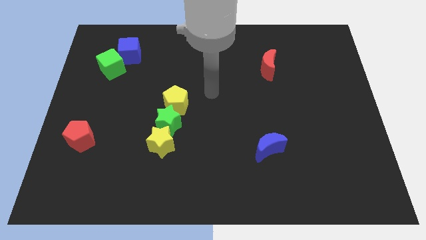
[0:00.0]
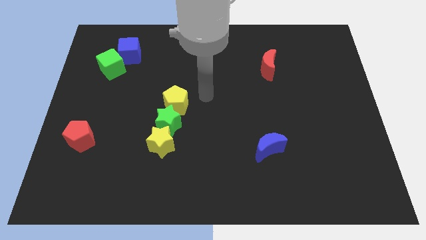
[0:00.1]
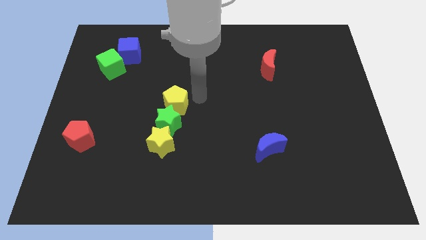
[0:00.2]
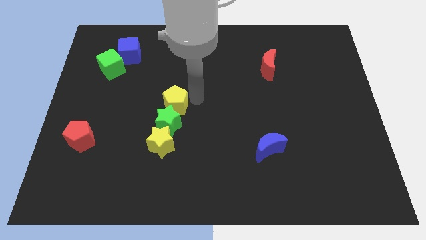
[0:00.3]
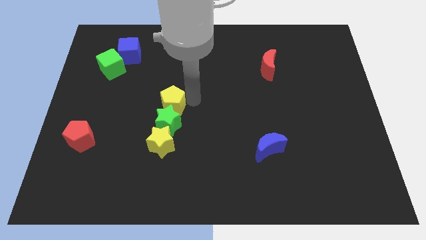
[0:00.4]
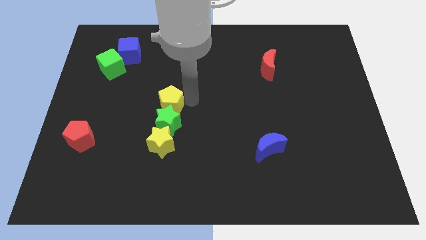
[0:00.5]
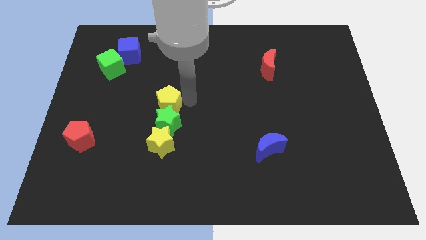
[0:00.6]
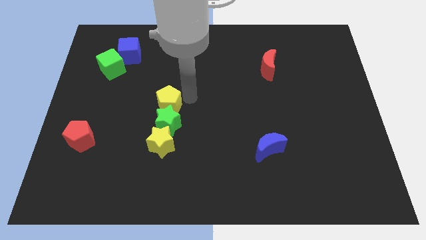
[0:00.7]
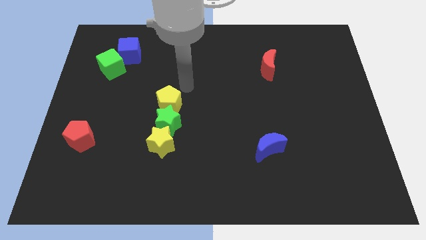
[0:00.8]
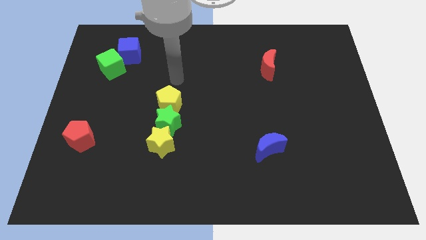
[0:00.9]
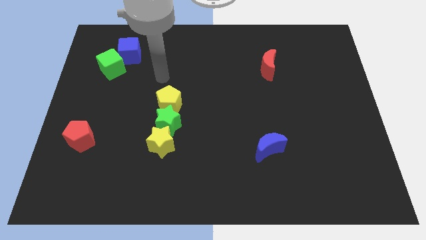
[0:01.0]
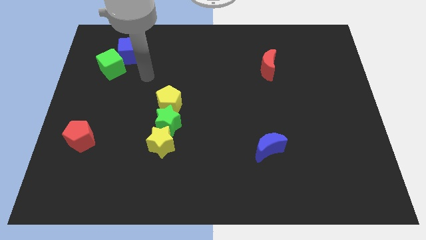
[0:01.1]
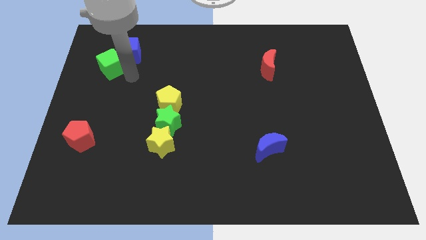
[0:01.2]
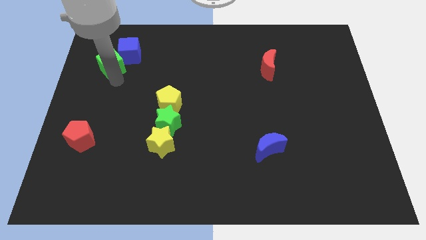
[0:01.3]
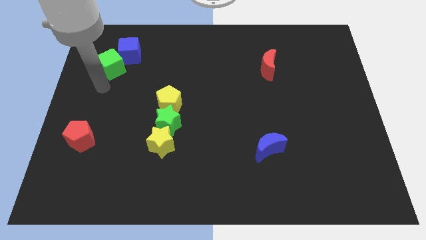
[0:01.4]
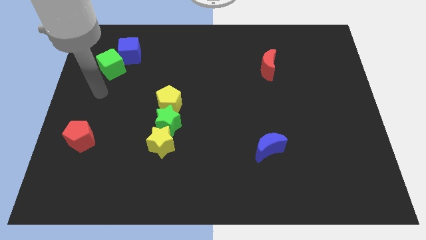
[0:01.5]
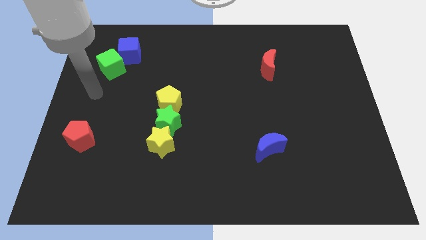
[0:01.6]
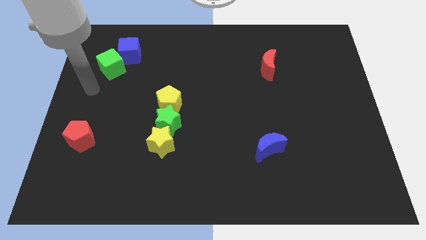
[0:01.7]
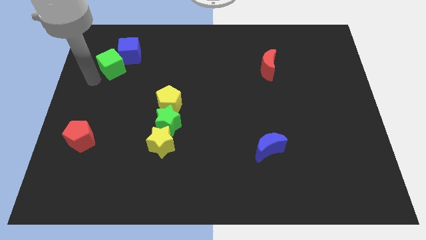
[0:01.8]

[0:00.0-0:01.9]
move yellow pentagon close to the green star

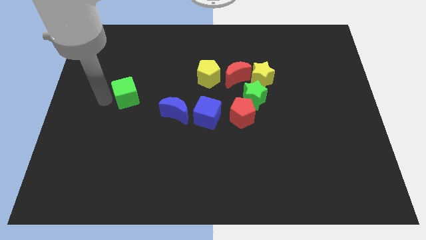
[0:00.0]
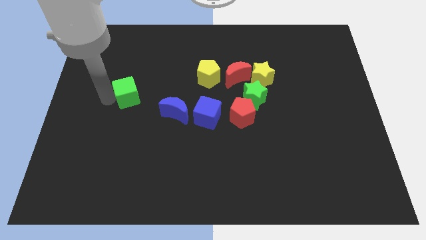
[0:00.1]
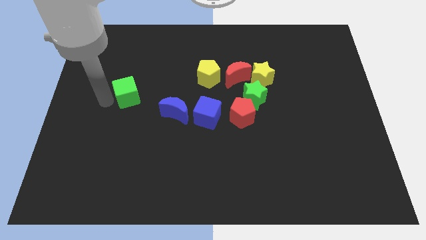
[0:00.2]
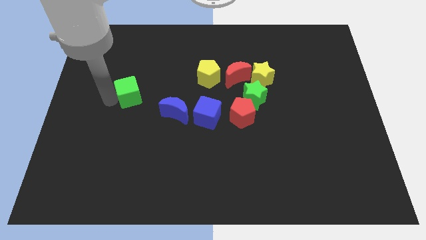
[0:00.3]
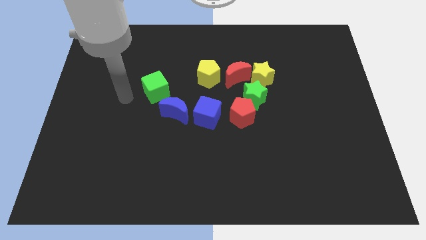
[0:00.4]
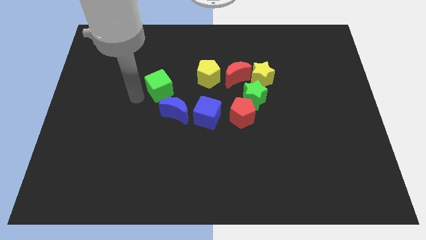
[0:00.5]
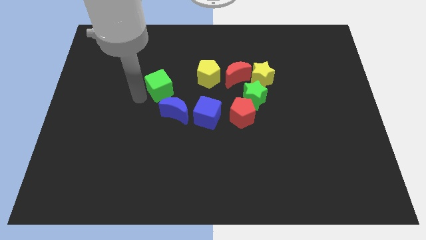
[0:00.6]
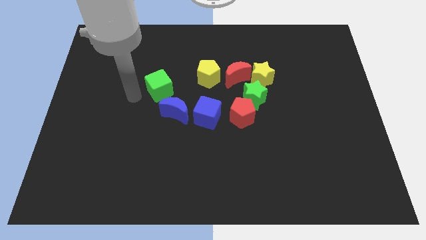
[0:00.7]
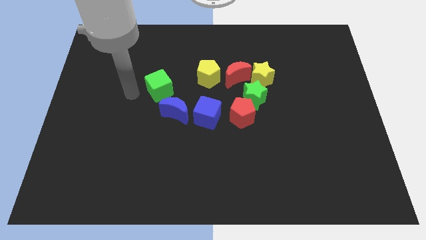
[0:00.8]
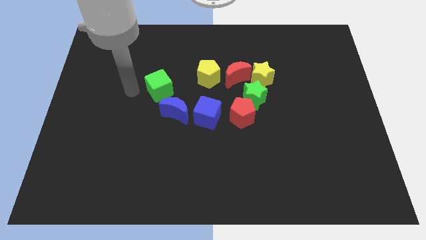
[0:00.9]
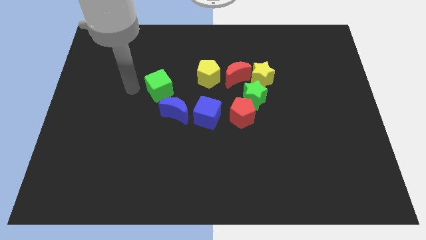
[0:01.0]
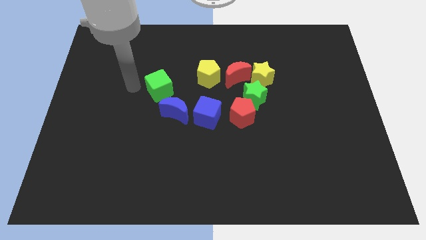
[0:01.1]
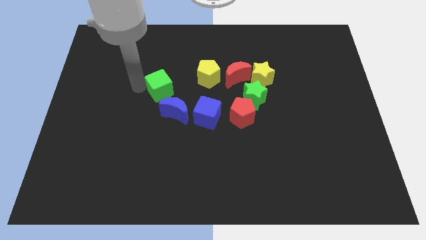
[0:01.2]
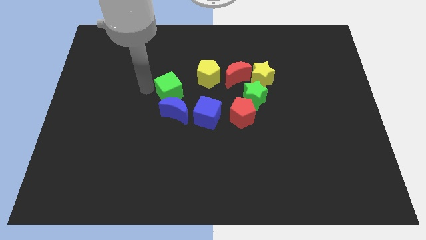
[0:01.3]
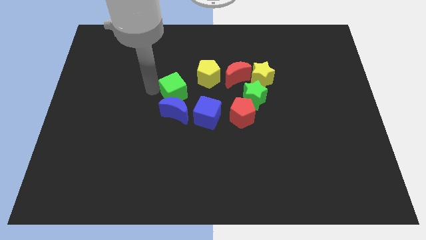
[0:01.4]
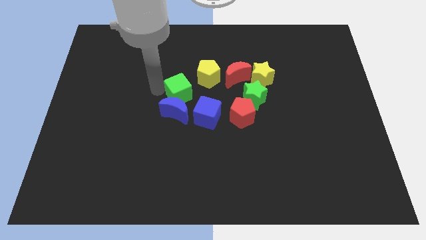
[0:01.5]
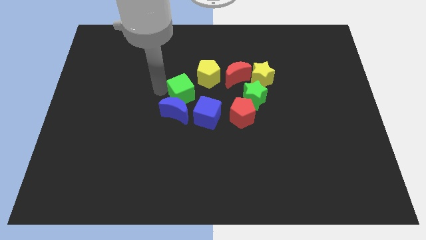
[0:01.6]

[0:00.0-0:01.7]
place the green cube above the blue moon

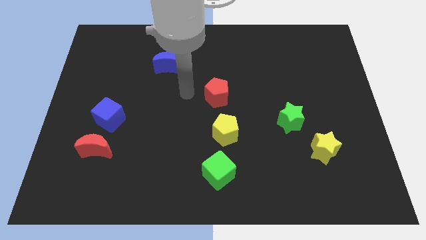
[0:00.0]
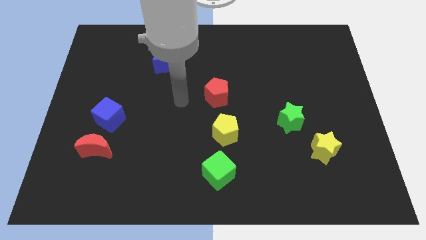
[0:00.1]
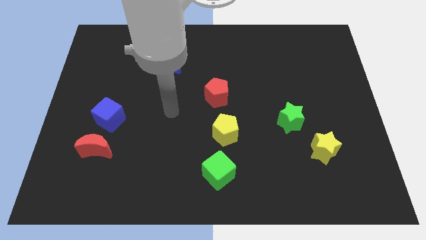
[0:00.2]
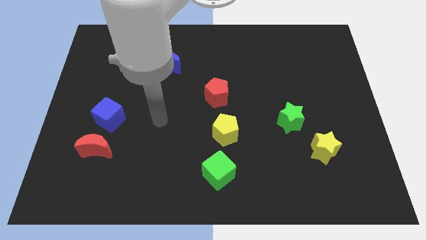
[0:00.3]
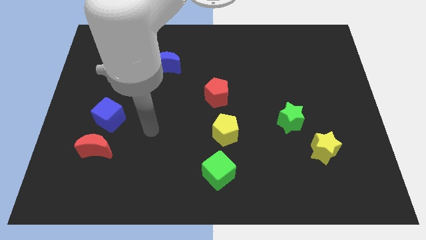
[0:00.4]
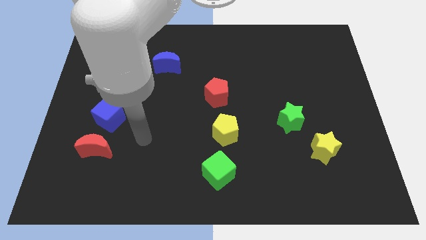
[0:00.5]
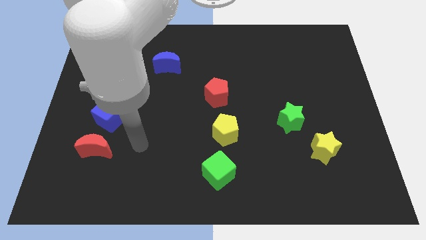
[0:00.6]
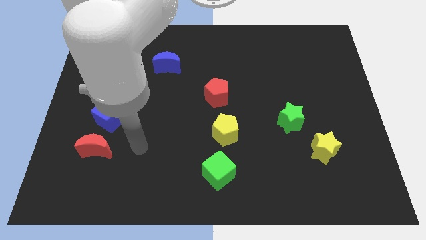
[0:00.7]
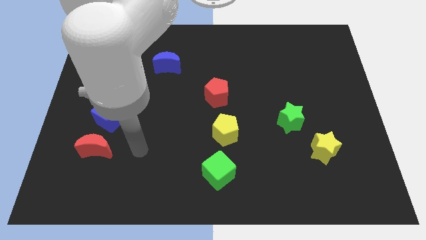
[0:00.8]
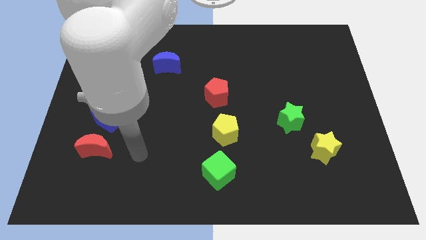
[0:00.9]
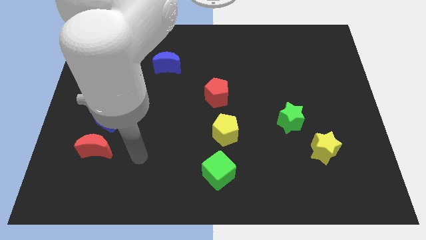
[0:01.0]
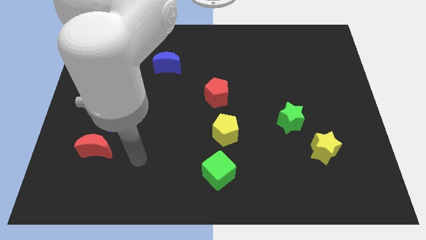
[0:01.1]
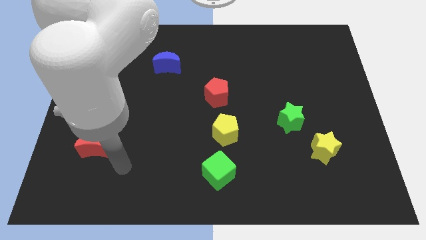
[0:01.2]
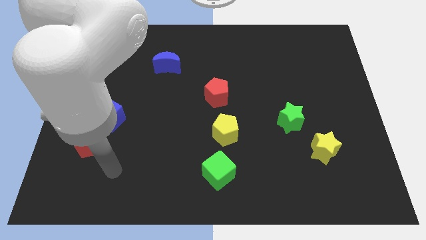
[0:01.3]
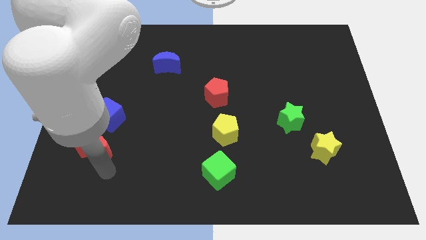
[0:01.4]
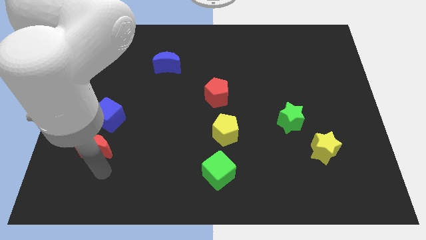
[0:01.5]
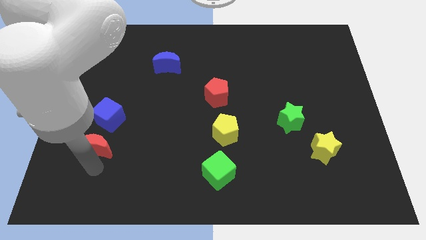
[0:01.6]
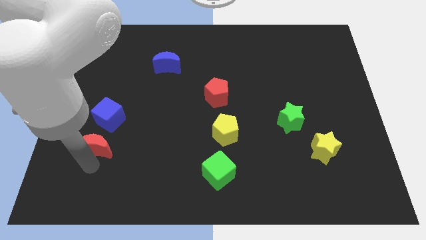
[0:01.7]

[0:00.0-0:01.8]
move your arm below the red crescent

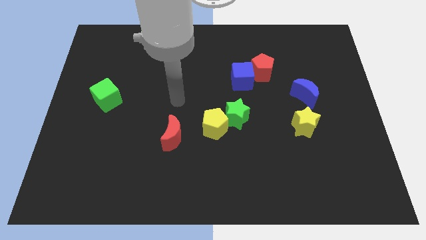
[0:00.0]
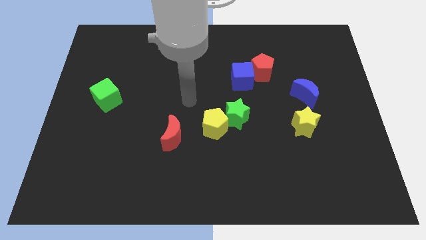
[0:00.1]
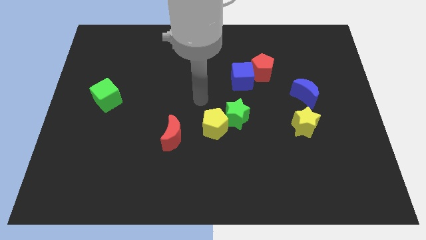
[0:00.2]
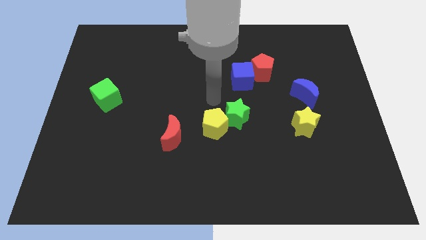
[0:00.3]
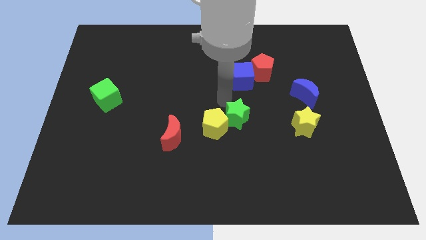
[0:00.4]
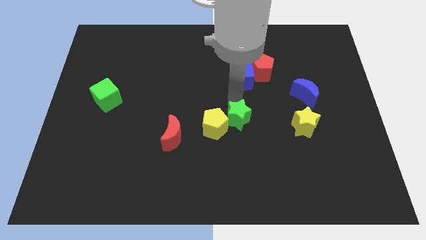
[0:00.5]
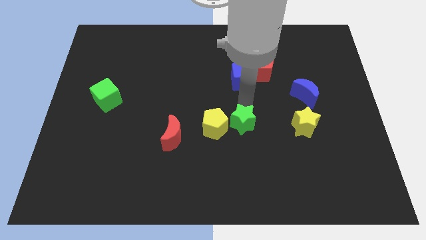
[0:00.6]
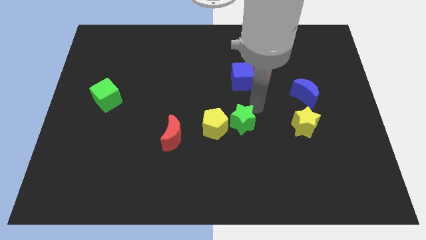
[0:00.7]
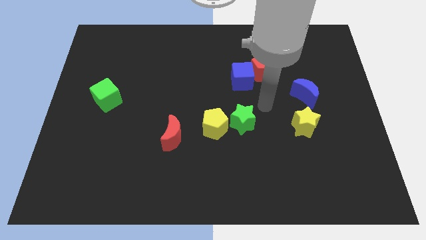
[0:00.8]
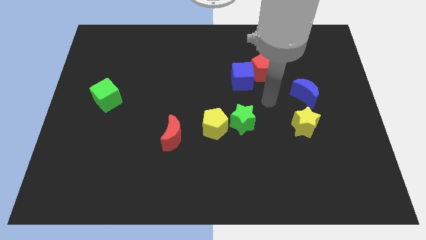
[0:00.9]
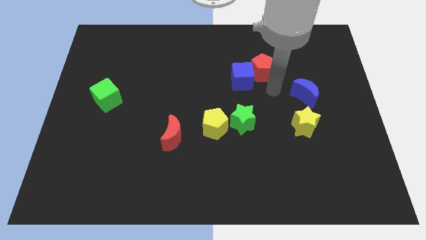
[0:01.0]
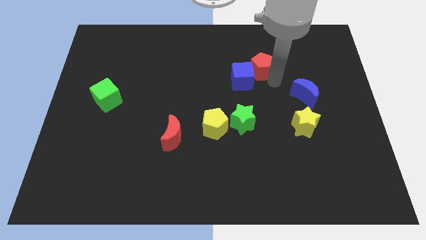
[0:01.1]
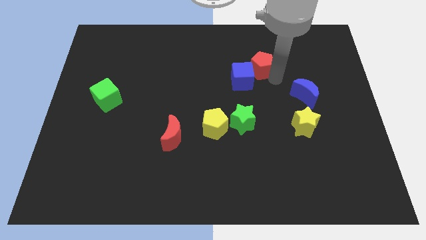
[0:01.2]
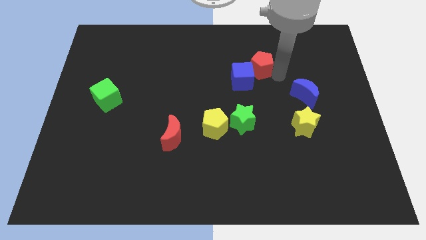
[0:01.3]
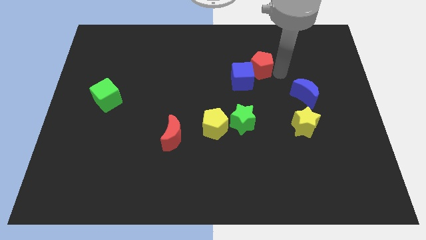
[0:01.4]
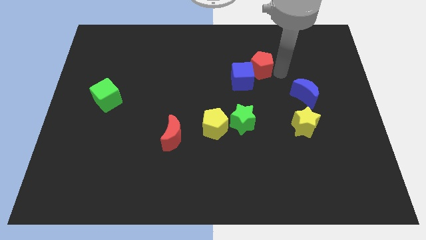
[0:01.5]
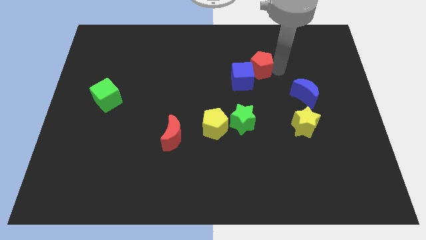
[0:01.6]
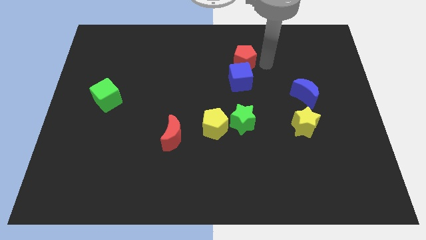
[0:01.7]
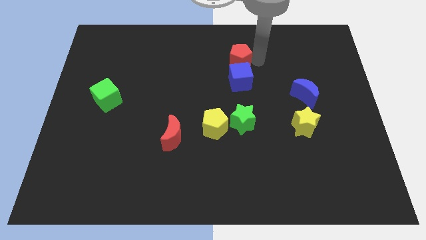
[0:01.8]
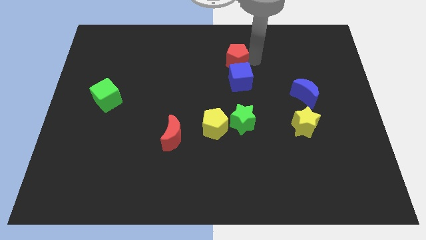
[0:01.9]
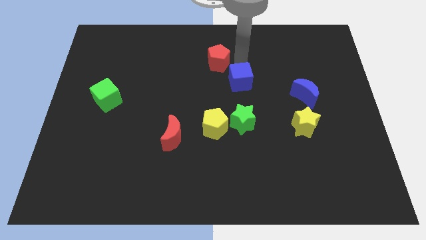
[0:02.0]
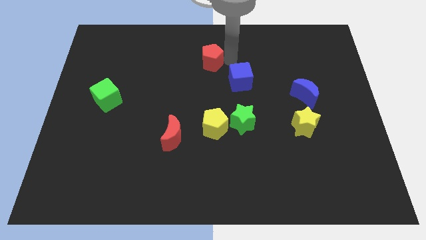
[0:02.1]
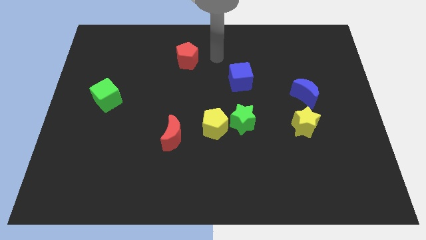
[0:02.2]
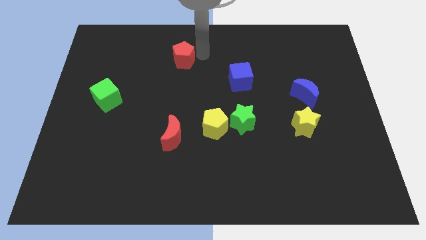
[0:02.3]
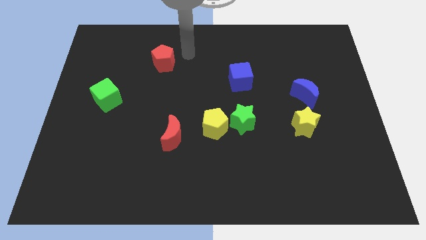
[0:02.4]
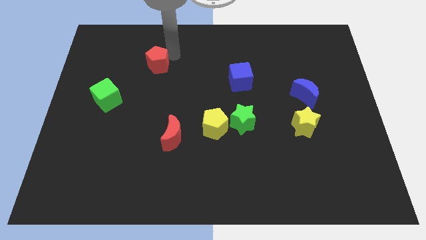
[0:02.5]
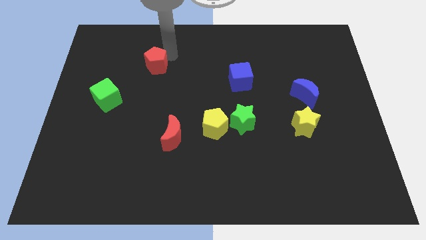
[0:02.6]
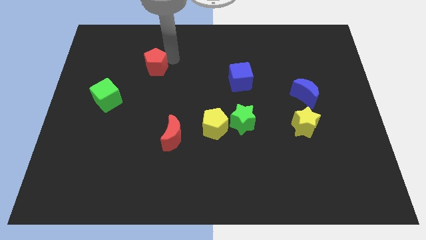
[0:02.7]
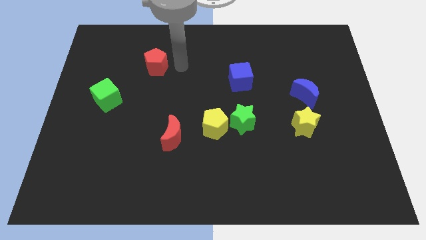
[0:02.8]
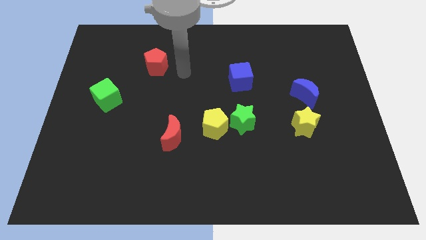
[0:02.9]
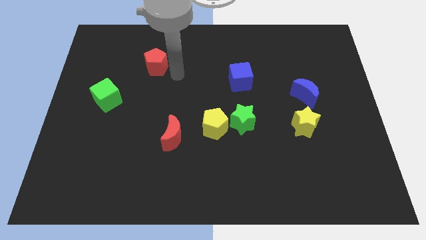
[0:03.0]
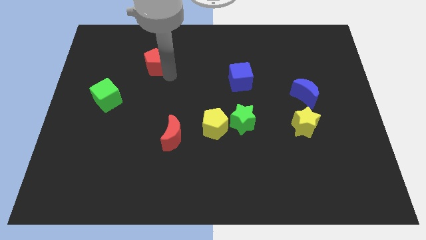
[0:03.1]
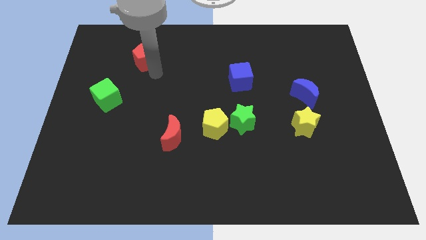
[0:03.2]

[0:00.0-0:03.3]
move the red pentagon towards the green cube
